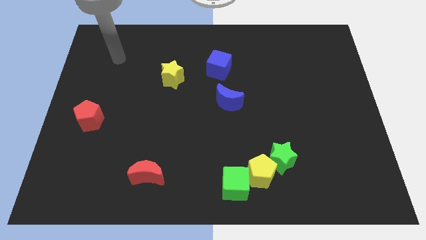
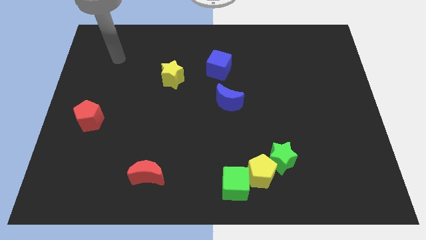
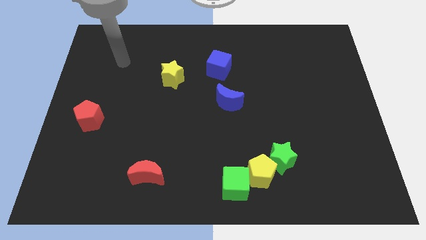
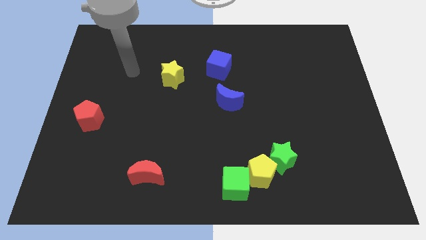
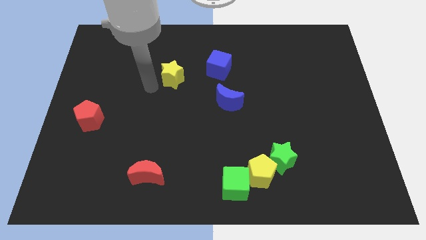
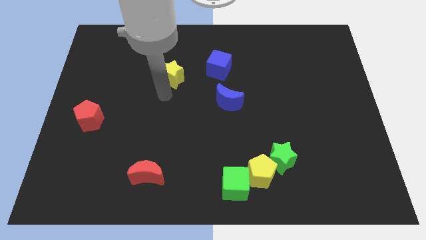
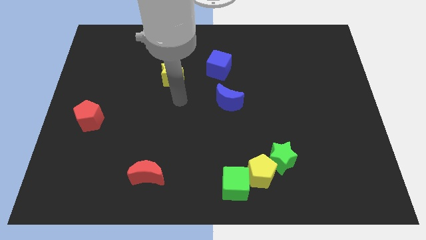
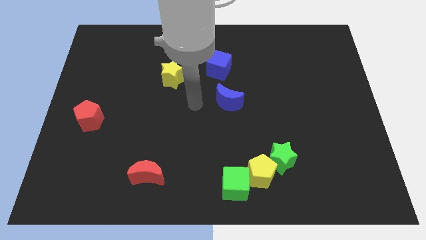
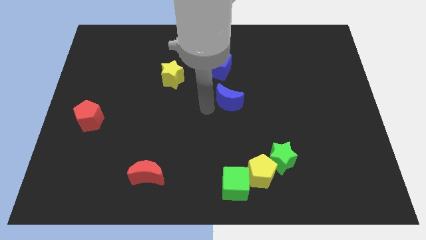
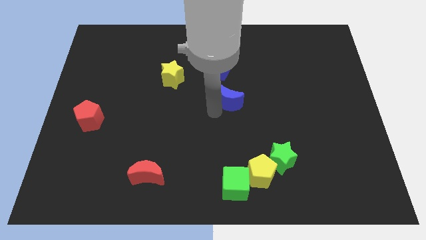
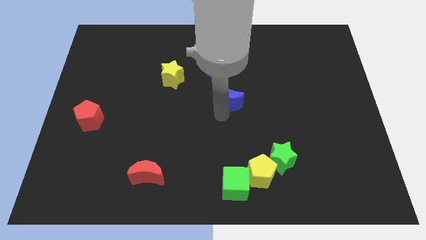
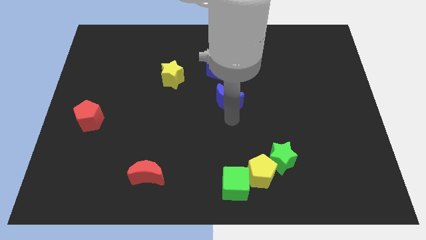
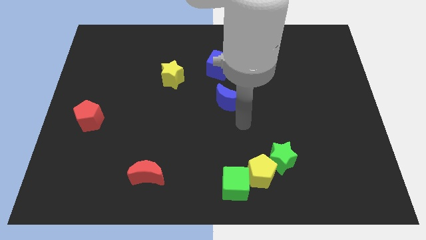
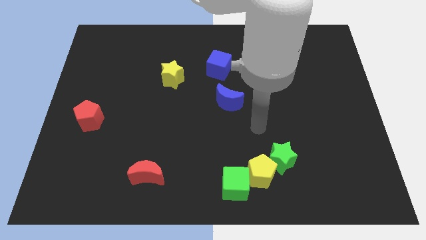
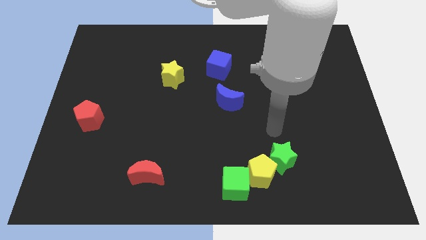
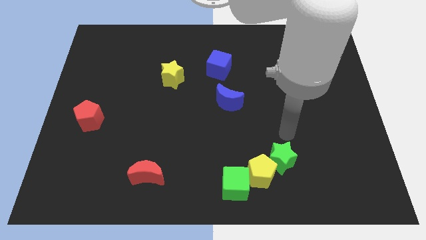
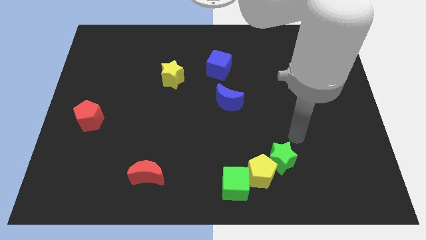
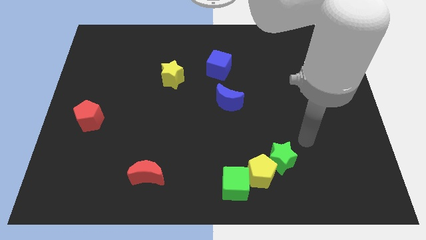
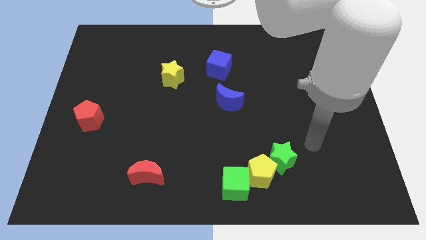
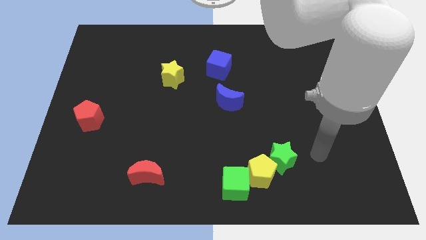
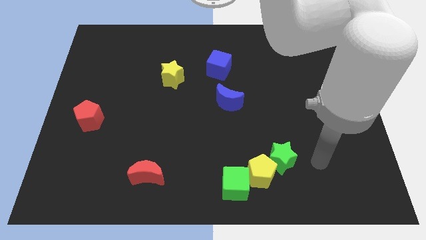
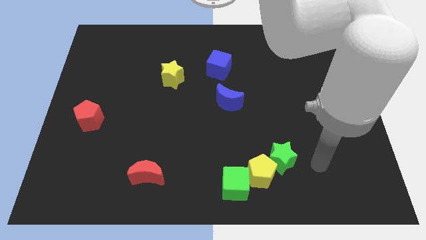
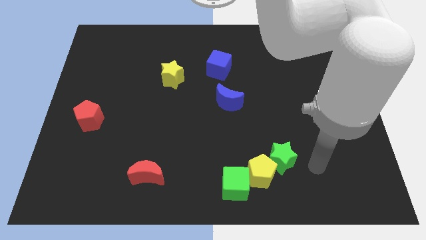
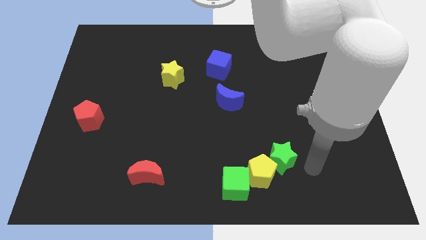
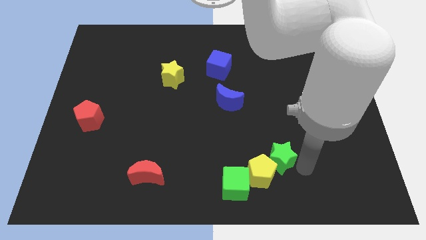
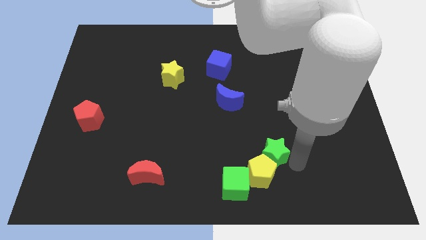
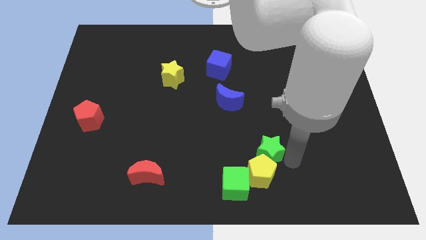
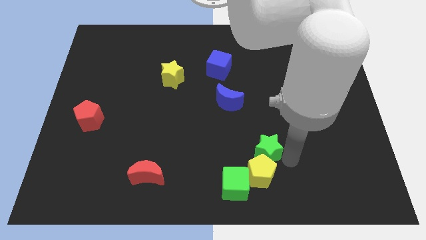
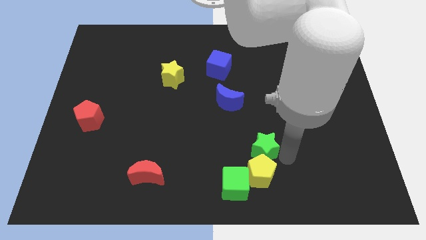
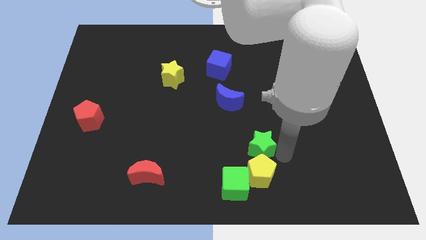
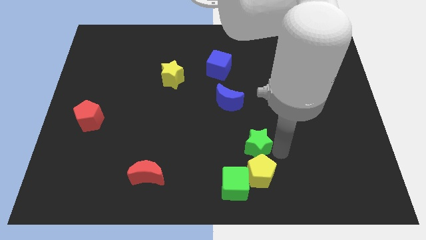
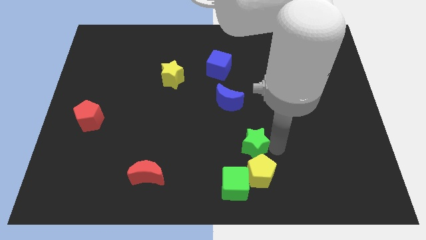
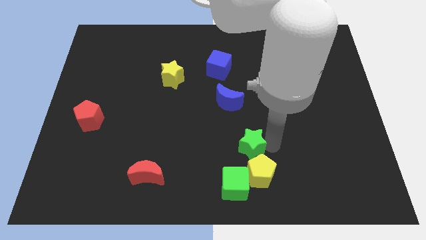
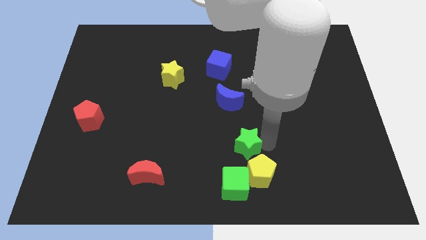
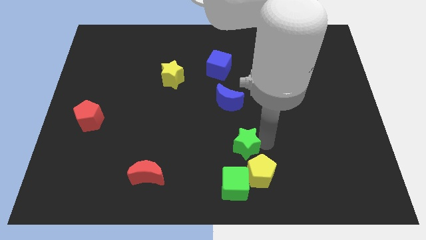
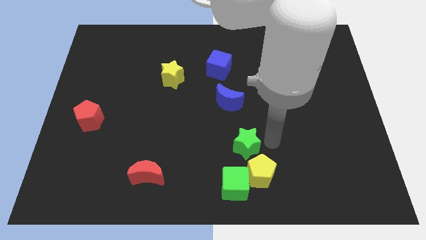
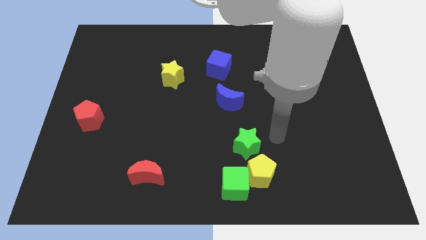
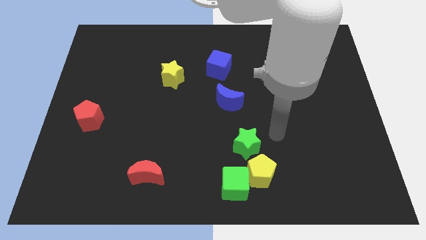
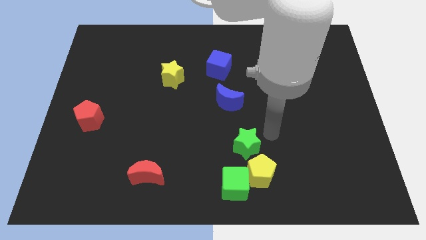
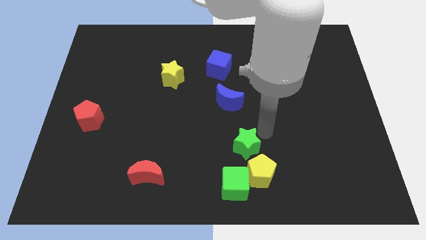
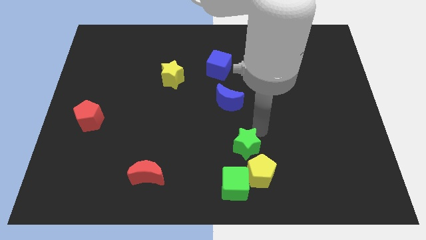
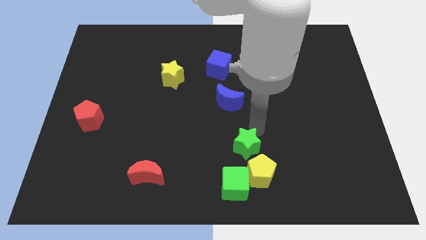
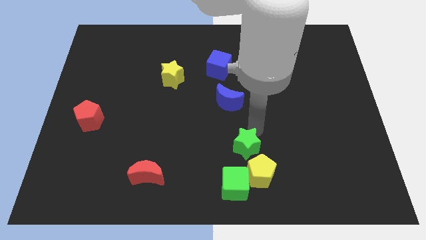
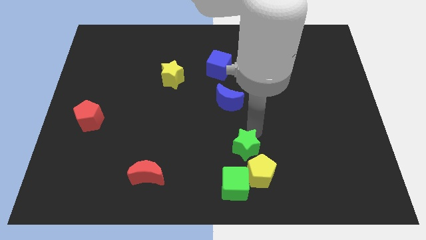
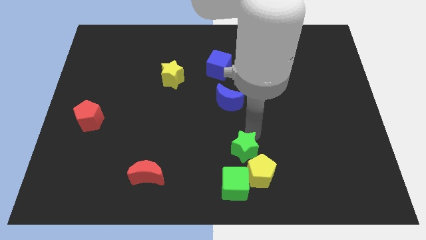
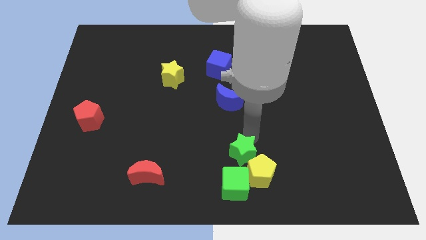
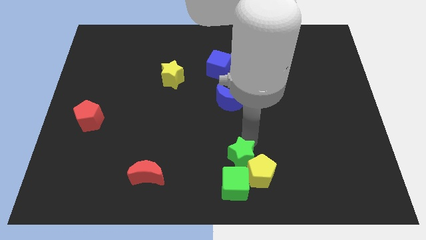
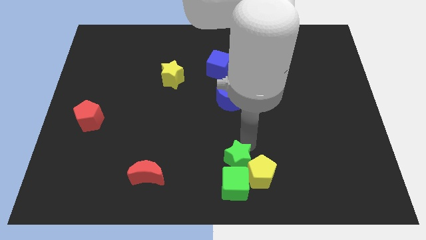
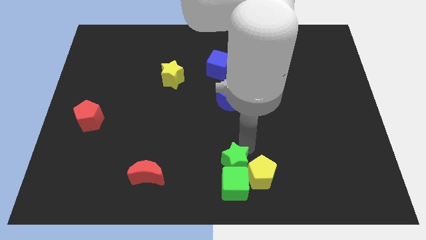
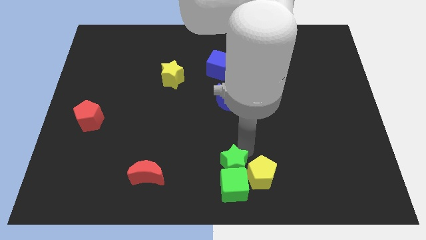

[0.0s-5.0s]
slide the green star close to the green cube

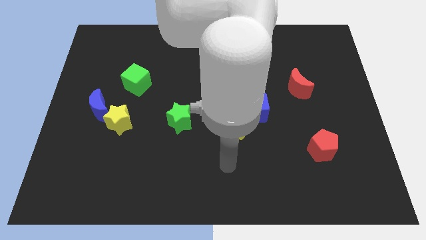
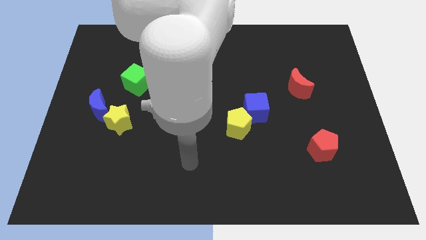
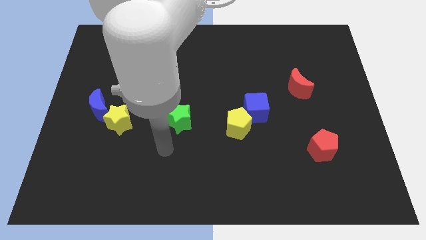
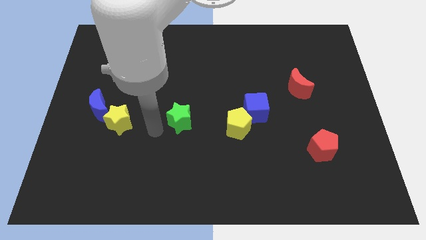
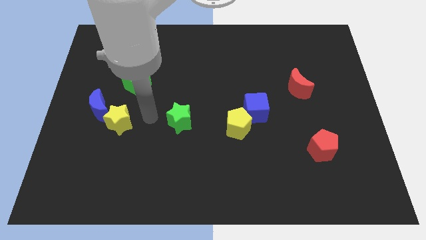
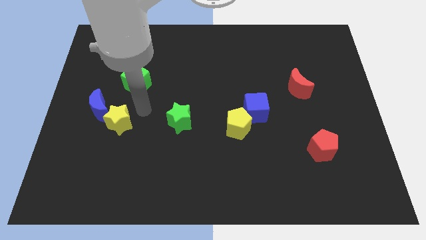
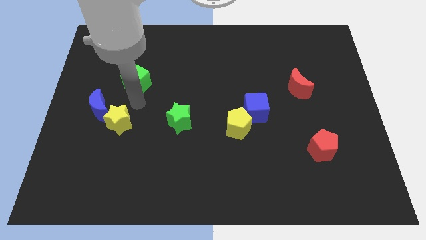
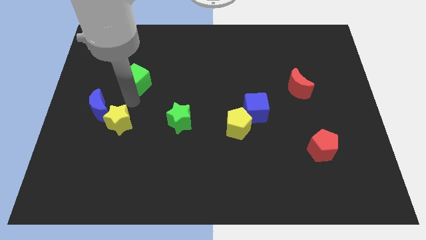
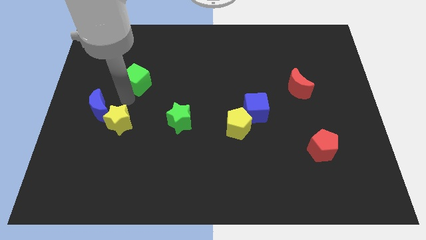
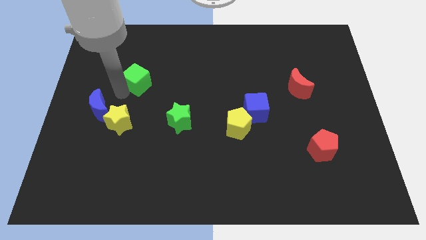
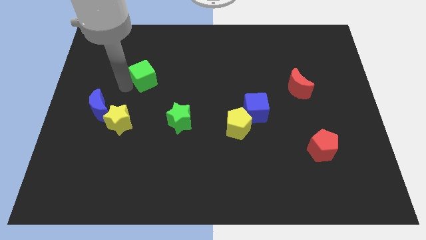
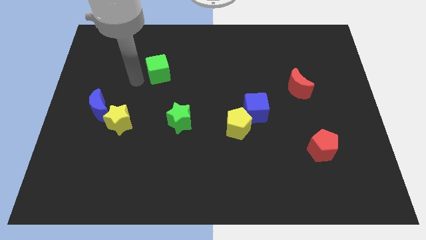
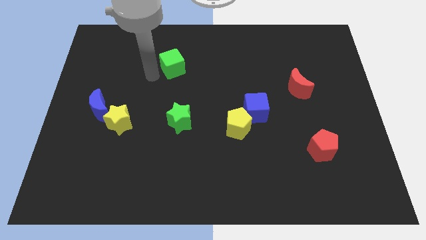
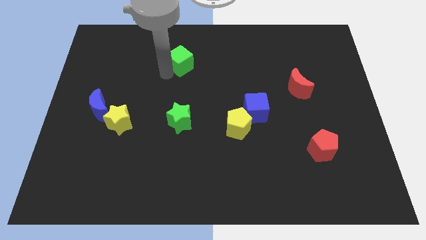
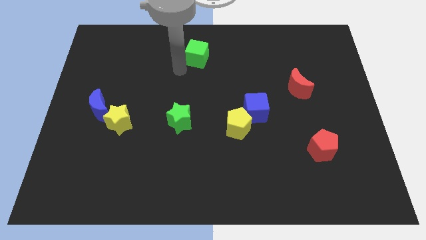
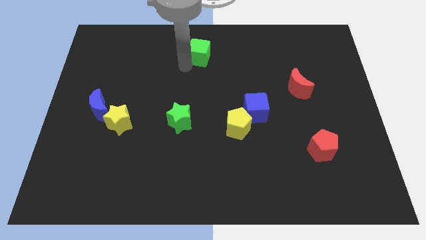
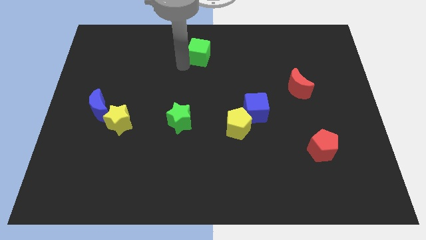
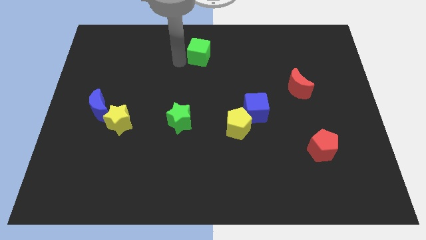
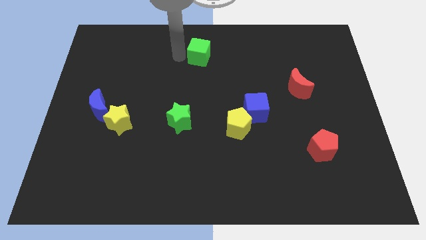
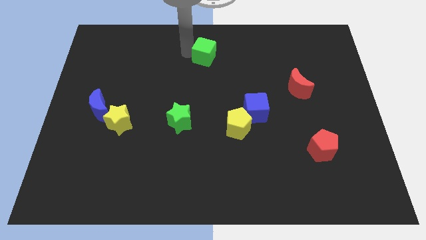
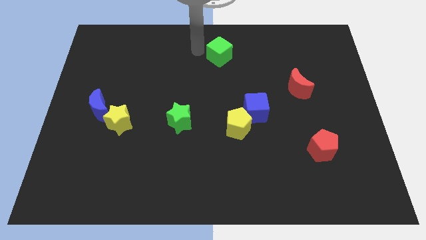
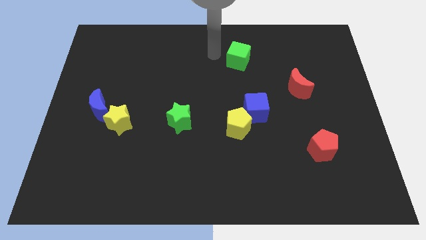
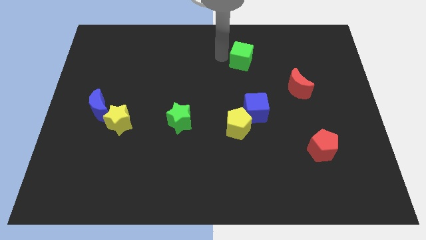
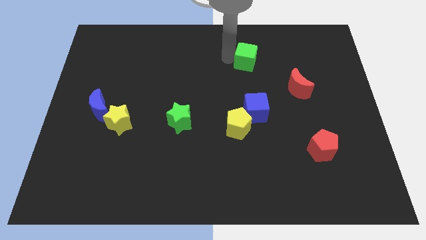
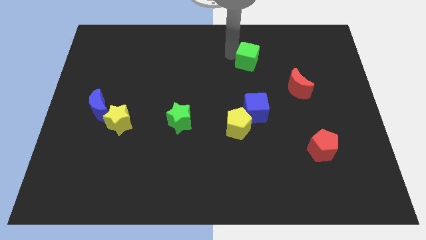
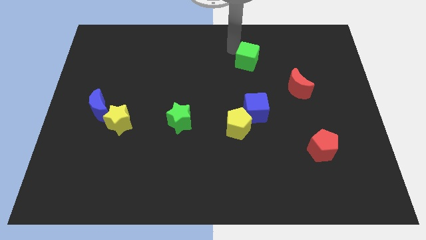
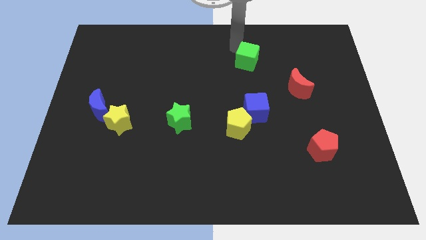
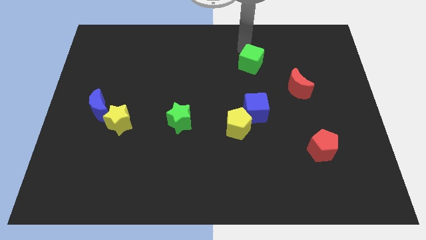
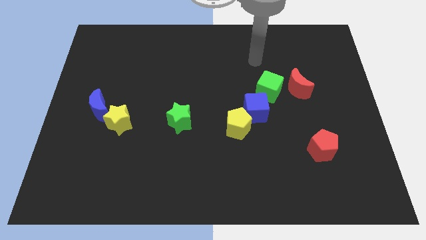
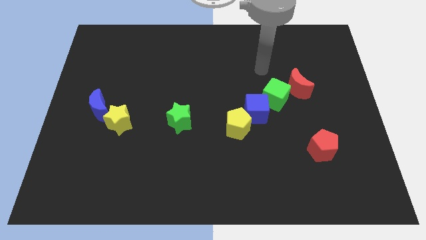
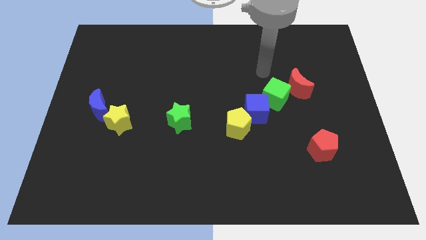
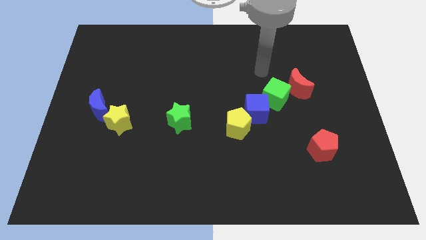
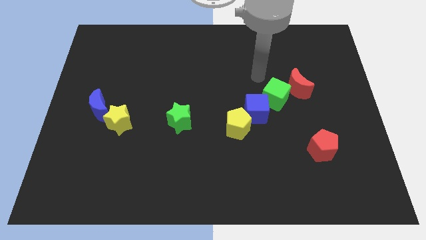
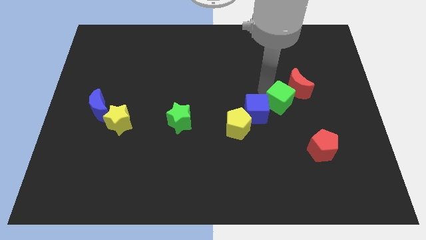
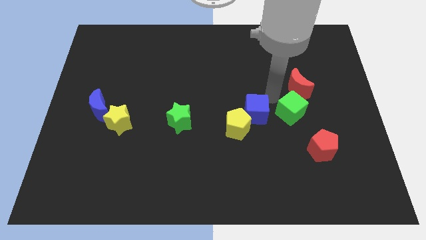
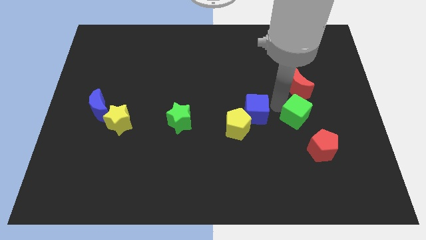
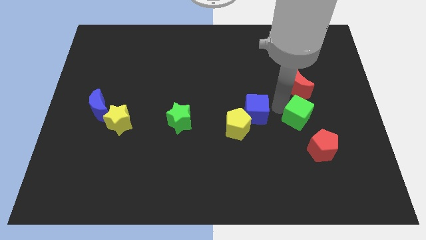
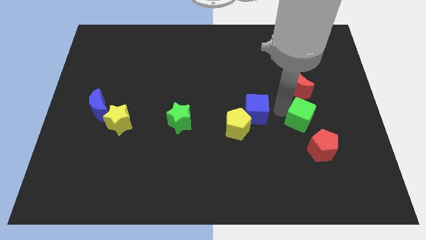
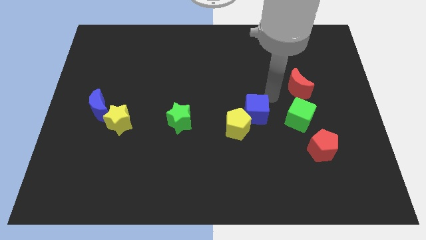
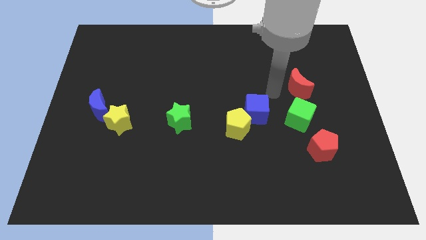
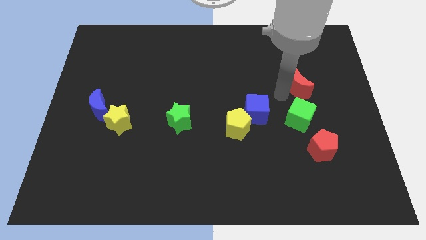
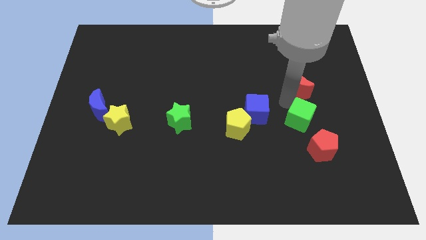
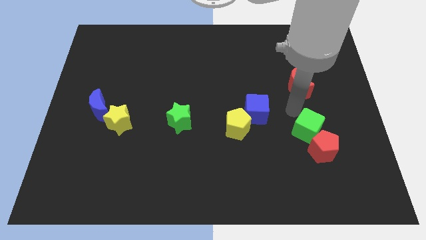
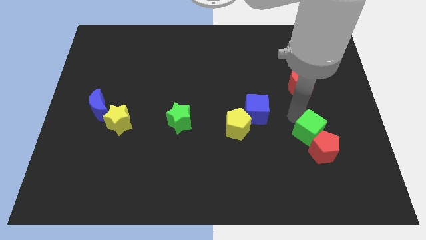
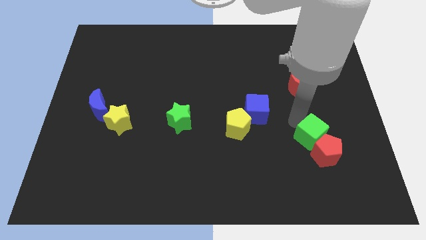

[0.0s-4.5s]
push the green cube to the red pentagon
